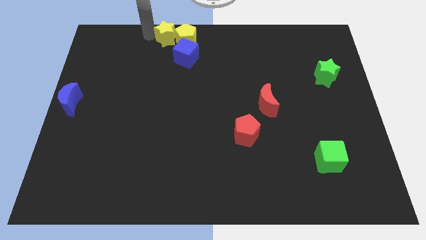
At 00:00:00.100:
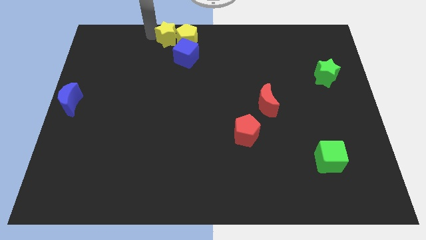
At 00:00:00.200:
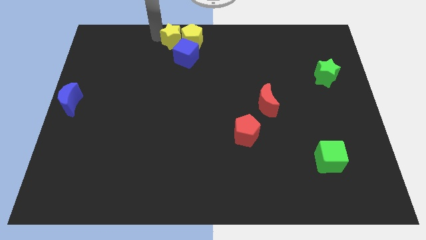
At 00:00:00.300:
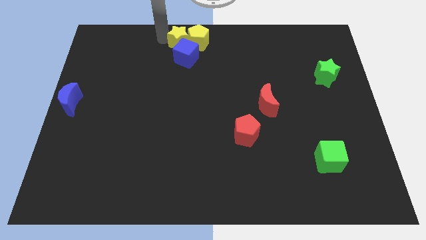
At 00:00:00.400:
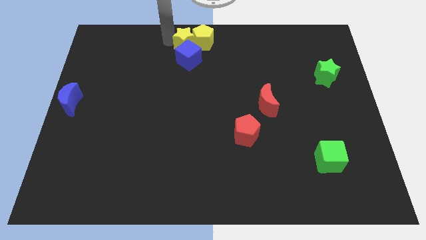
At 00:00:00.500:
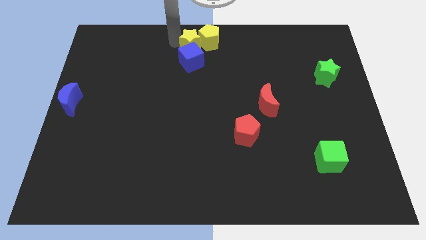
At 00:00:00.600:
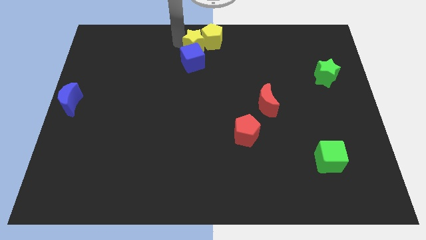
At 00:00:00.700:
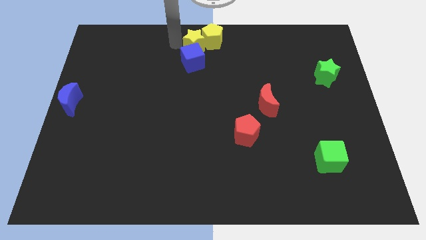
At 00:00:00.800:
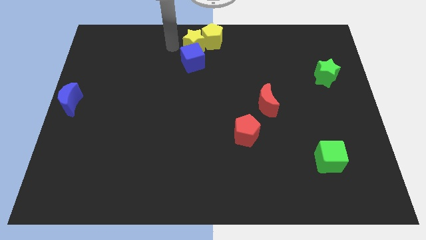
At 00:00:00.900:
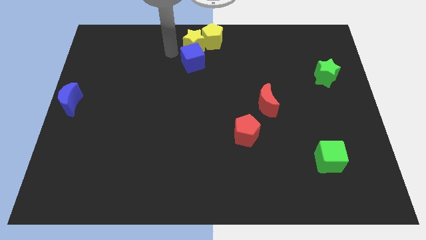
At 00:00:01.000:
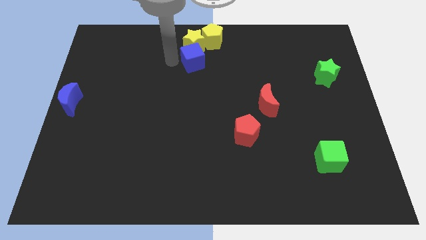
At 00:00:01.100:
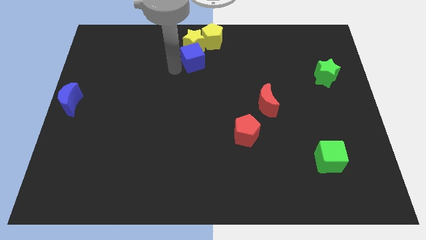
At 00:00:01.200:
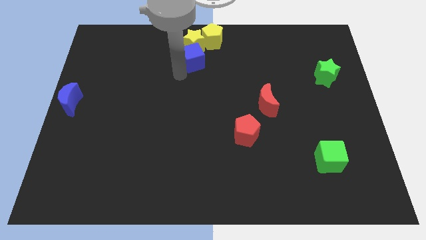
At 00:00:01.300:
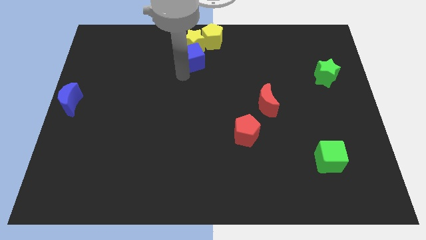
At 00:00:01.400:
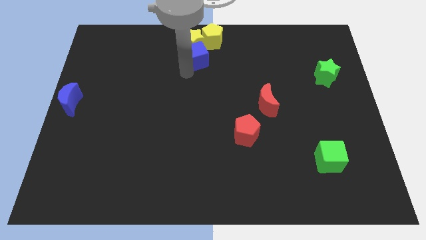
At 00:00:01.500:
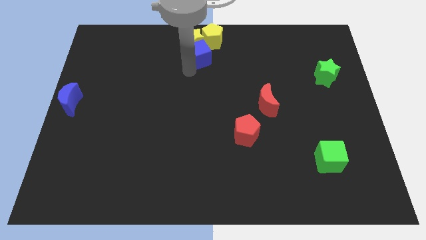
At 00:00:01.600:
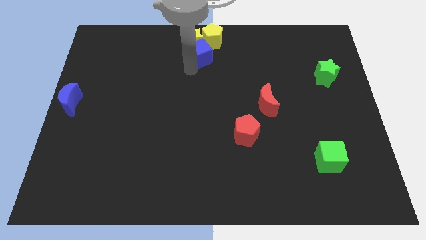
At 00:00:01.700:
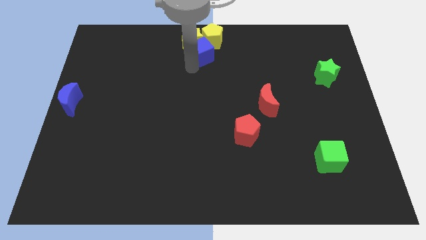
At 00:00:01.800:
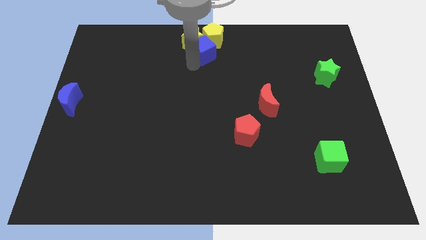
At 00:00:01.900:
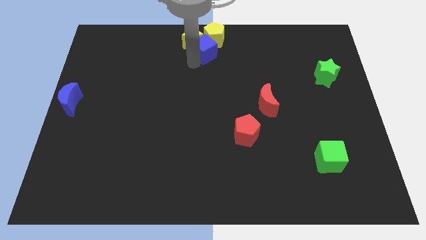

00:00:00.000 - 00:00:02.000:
push the yellow objects to the top center

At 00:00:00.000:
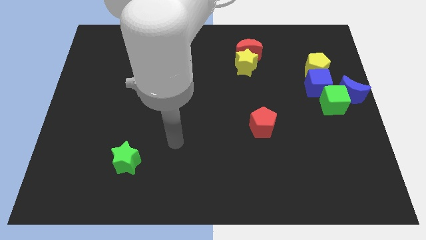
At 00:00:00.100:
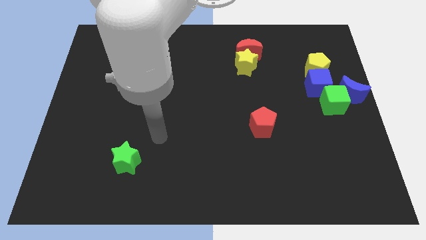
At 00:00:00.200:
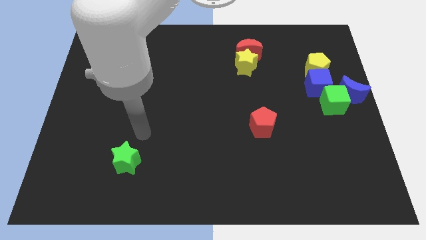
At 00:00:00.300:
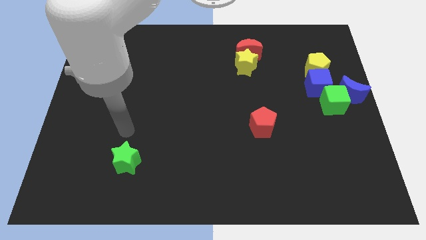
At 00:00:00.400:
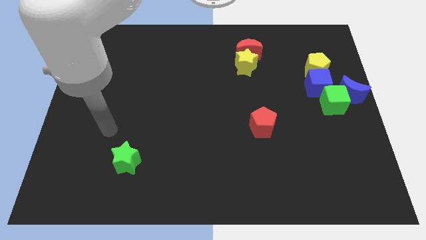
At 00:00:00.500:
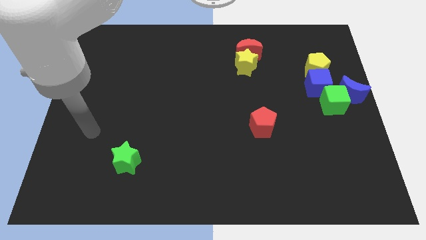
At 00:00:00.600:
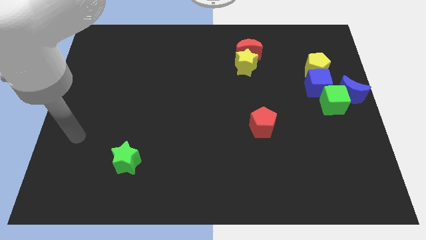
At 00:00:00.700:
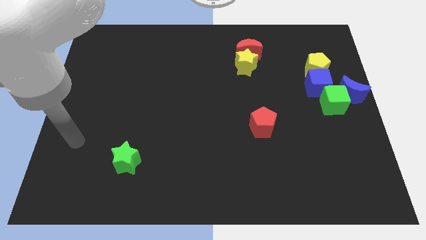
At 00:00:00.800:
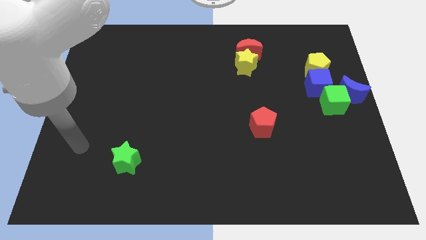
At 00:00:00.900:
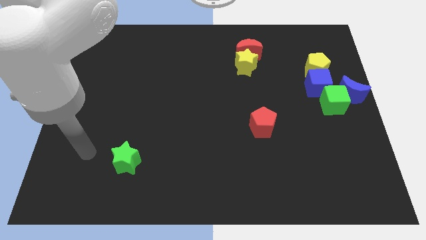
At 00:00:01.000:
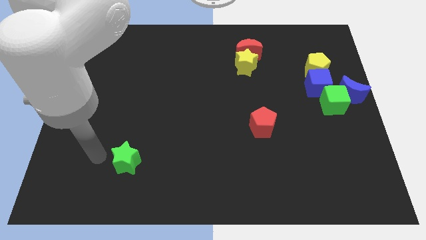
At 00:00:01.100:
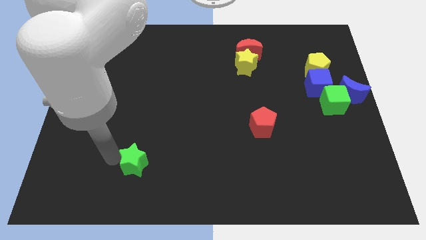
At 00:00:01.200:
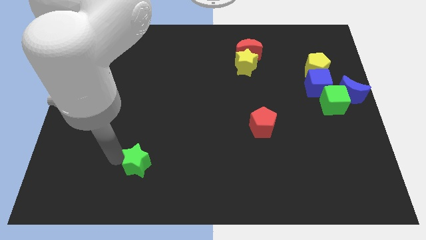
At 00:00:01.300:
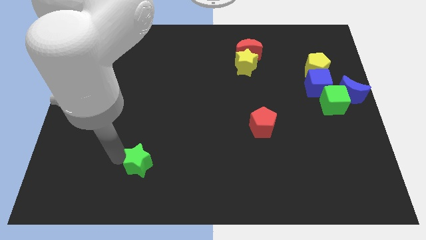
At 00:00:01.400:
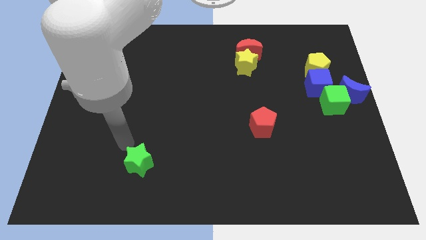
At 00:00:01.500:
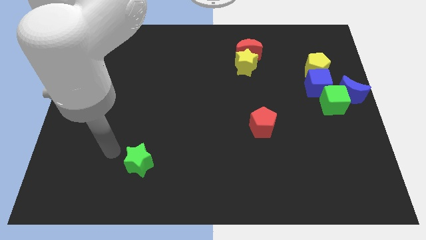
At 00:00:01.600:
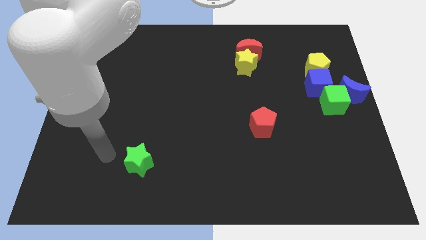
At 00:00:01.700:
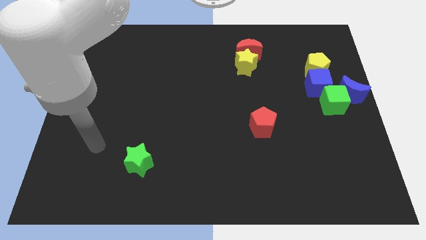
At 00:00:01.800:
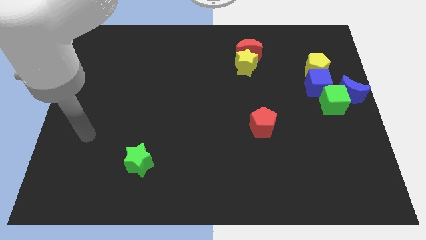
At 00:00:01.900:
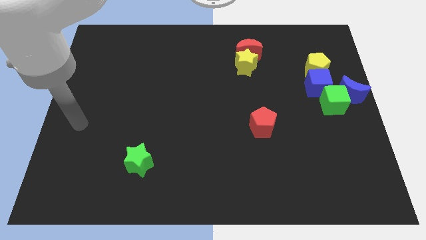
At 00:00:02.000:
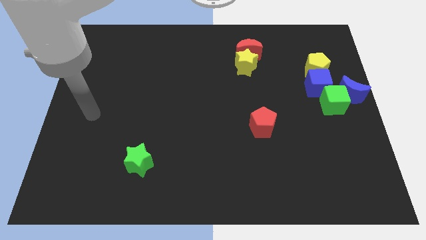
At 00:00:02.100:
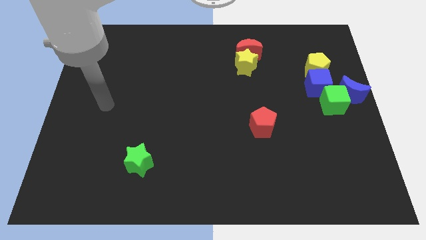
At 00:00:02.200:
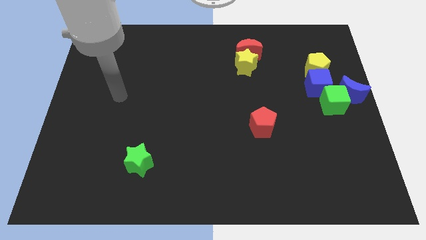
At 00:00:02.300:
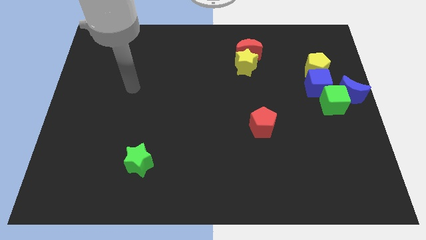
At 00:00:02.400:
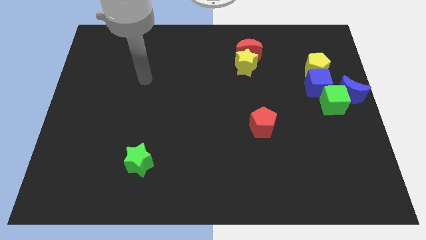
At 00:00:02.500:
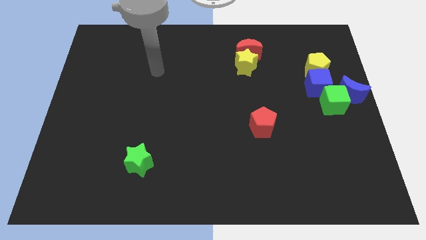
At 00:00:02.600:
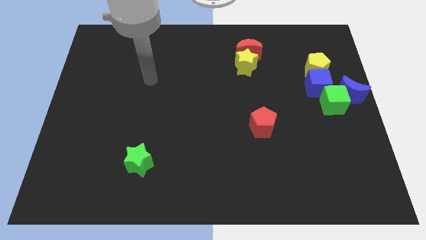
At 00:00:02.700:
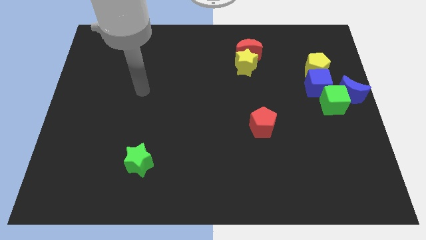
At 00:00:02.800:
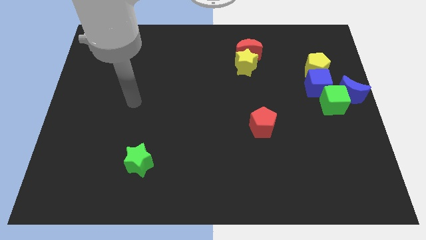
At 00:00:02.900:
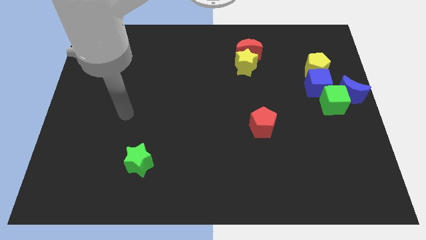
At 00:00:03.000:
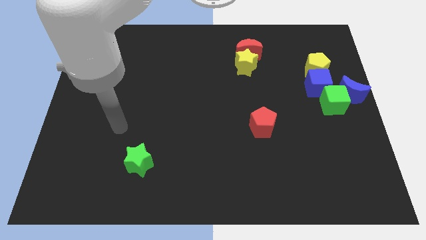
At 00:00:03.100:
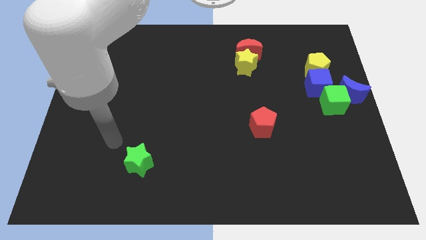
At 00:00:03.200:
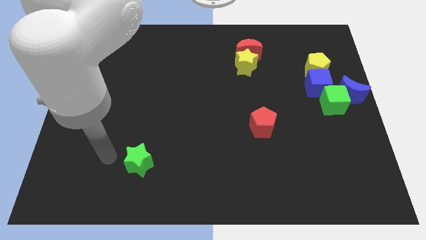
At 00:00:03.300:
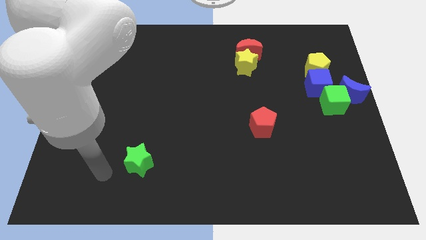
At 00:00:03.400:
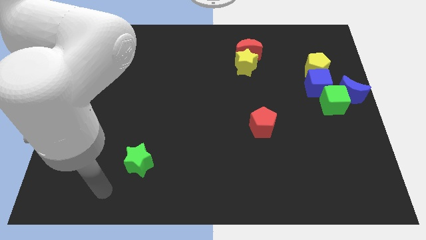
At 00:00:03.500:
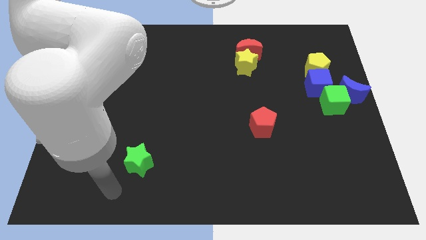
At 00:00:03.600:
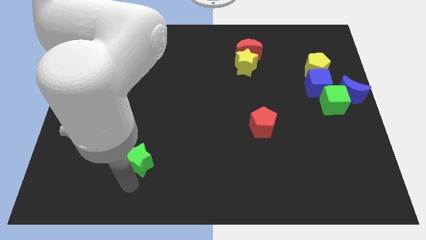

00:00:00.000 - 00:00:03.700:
push the green star to right slightly

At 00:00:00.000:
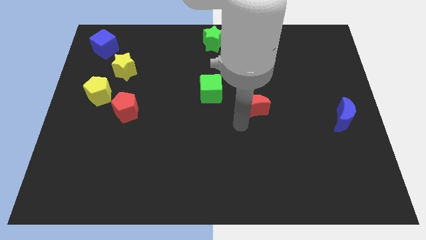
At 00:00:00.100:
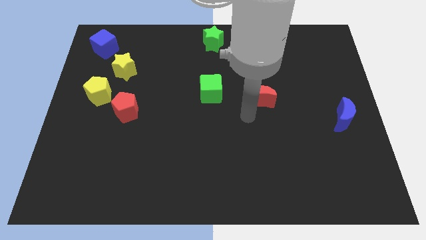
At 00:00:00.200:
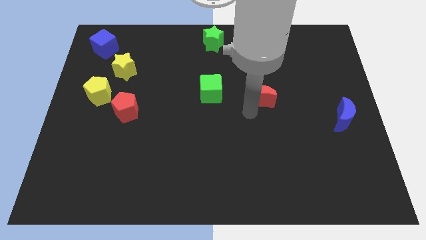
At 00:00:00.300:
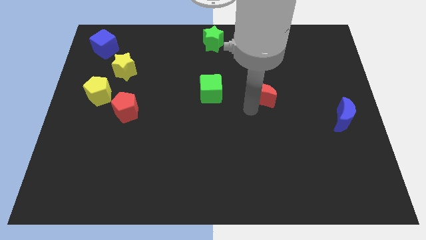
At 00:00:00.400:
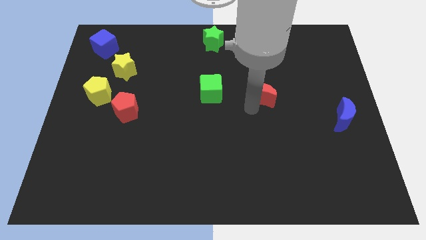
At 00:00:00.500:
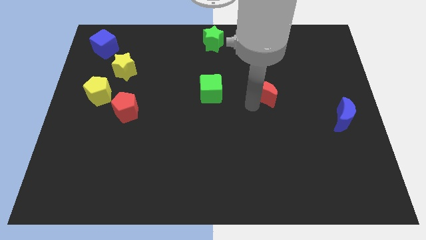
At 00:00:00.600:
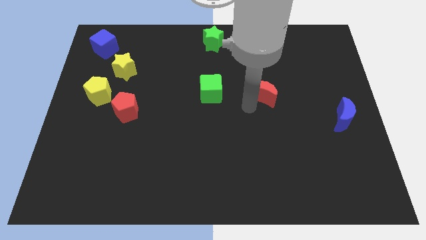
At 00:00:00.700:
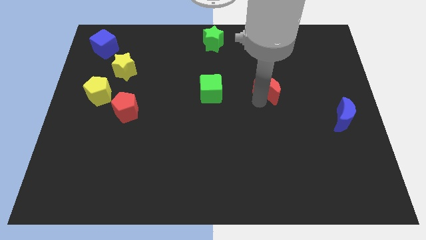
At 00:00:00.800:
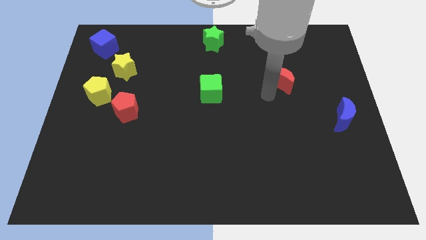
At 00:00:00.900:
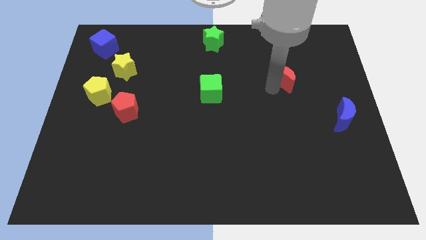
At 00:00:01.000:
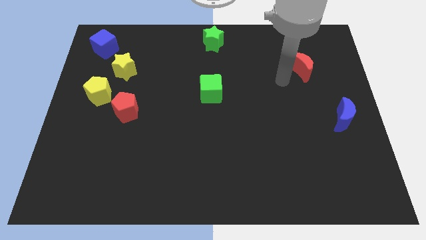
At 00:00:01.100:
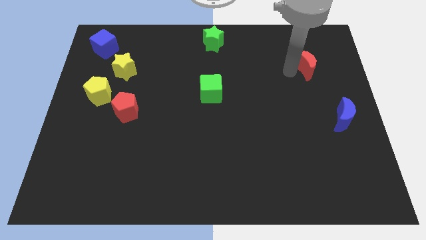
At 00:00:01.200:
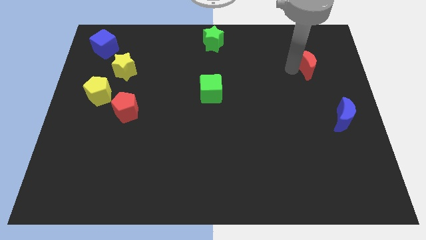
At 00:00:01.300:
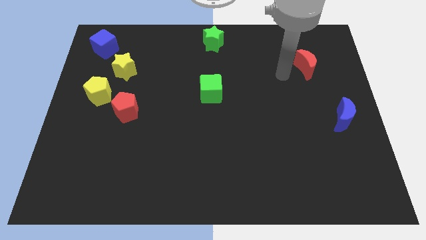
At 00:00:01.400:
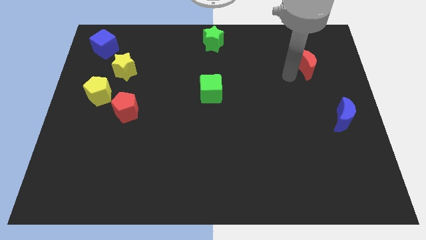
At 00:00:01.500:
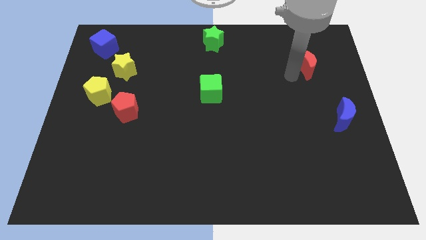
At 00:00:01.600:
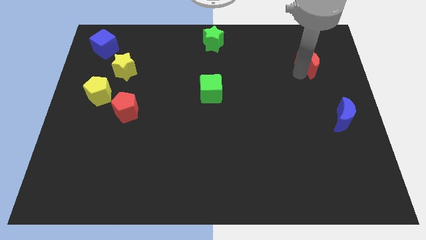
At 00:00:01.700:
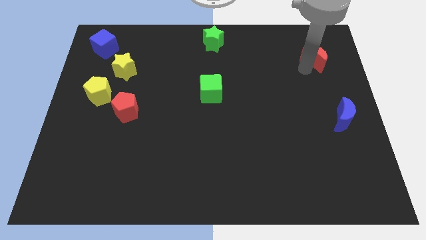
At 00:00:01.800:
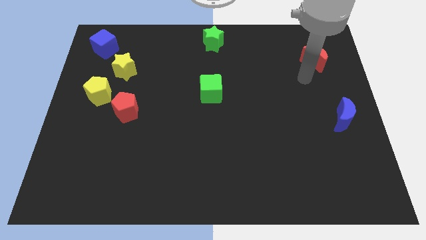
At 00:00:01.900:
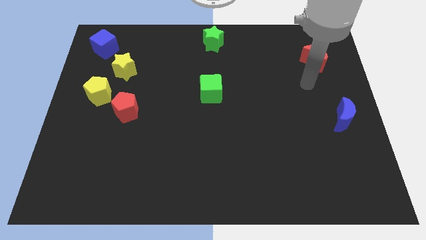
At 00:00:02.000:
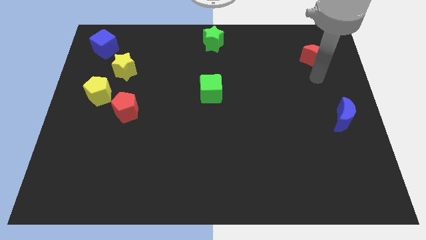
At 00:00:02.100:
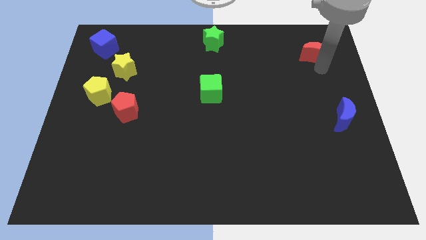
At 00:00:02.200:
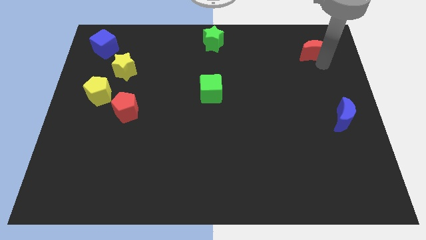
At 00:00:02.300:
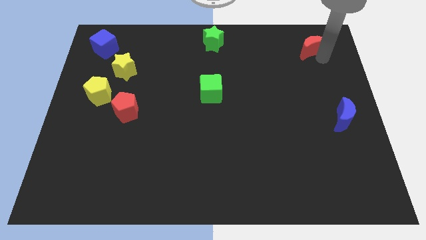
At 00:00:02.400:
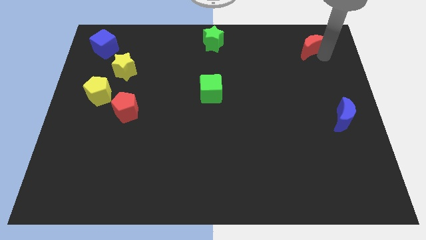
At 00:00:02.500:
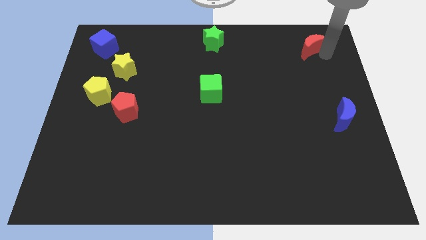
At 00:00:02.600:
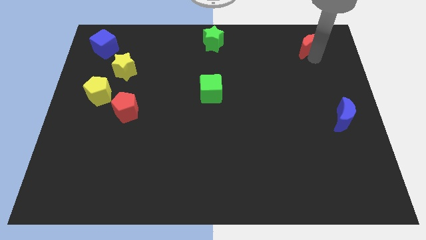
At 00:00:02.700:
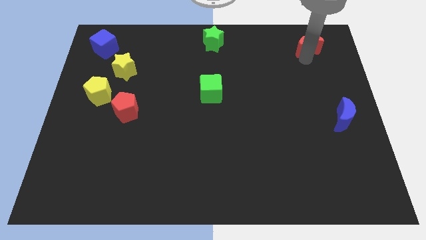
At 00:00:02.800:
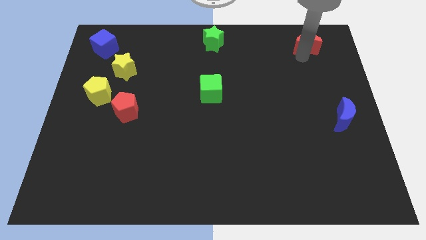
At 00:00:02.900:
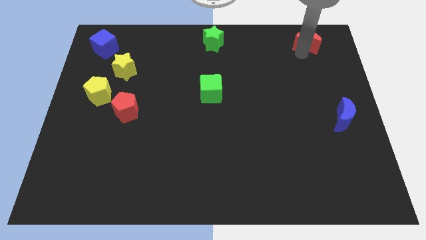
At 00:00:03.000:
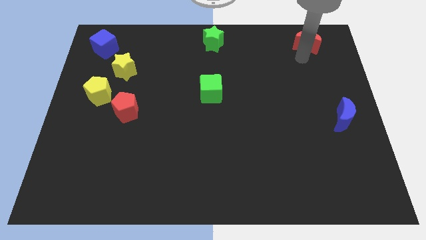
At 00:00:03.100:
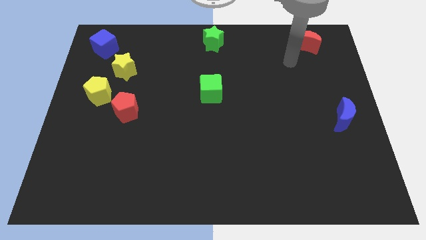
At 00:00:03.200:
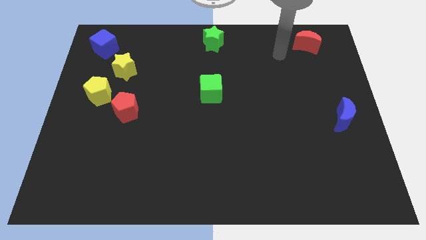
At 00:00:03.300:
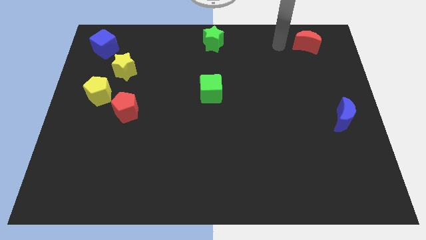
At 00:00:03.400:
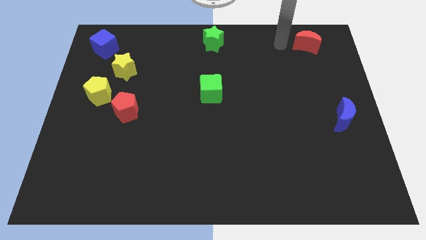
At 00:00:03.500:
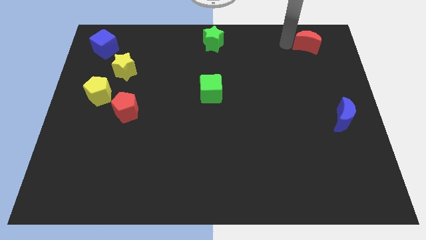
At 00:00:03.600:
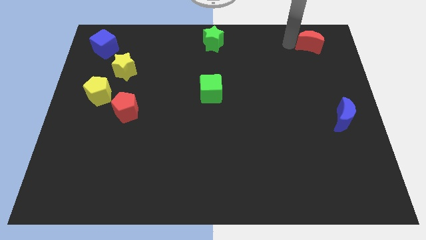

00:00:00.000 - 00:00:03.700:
move red moon towards top right side of the board
